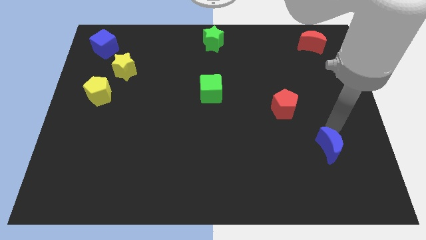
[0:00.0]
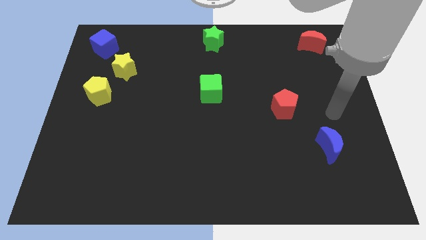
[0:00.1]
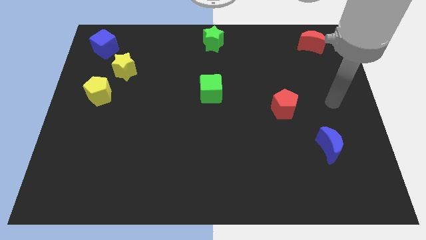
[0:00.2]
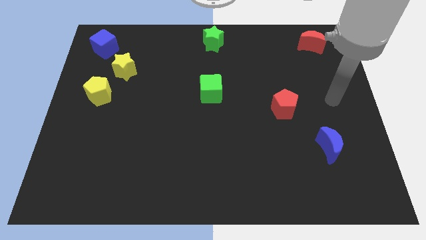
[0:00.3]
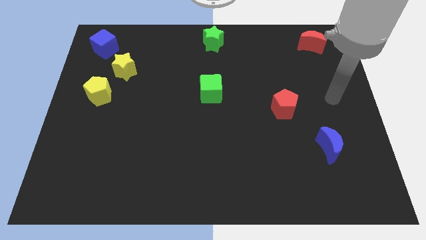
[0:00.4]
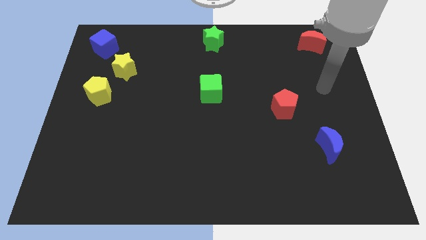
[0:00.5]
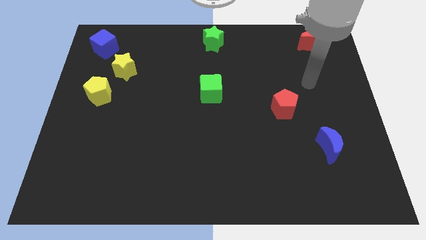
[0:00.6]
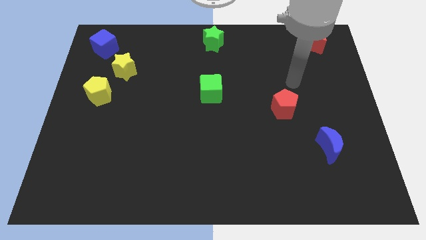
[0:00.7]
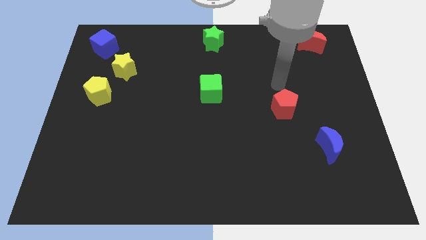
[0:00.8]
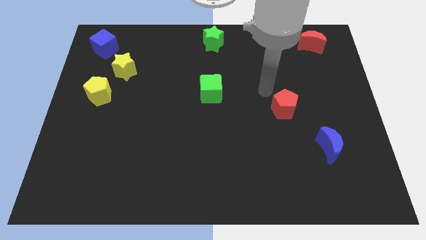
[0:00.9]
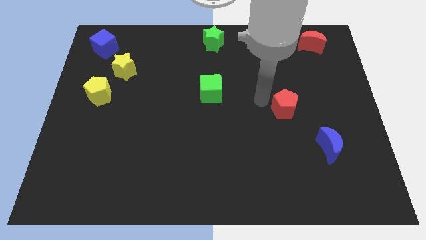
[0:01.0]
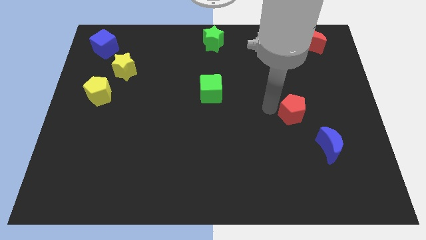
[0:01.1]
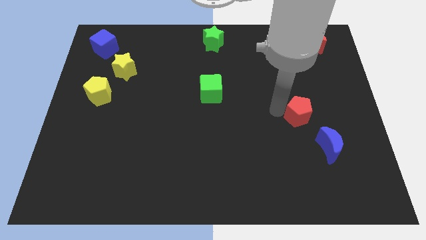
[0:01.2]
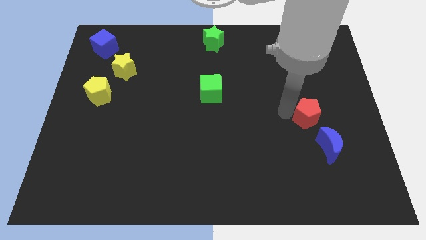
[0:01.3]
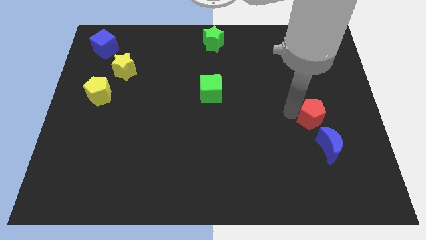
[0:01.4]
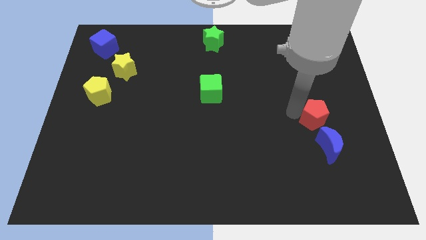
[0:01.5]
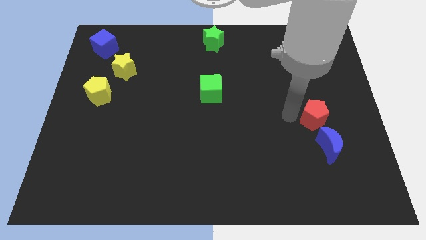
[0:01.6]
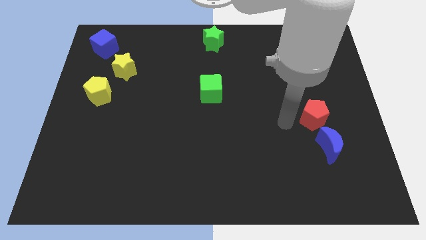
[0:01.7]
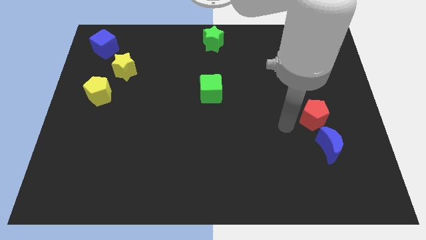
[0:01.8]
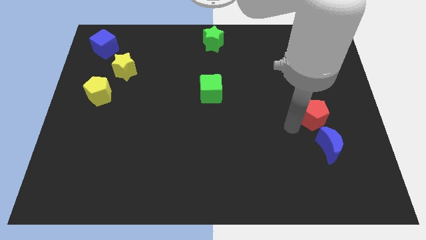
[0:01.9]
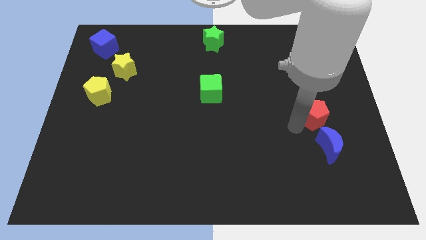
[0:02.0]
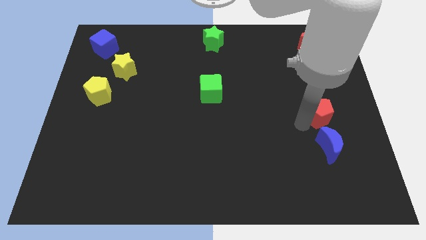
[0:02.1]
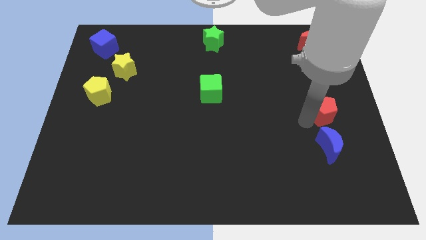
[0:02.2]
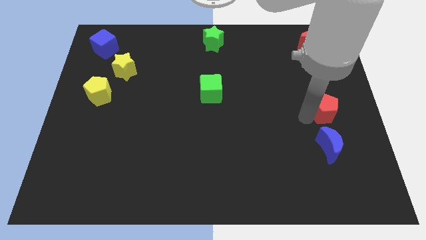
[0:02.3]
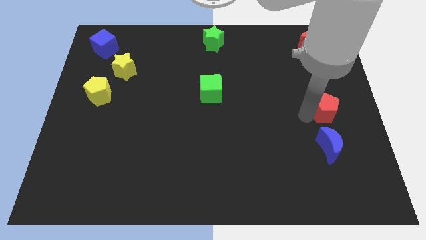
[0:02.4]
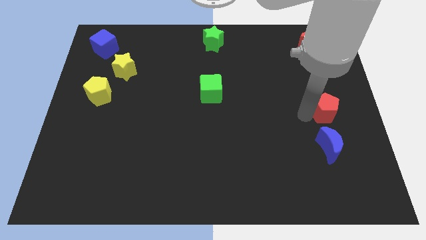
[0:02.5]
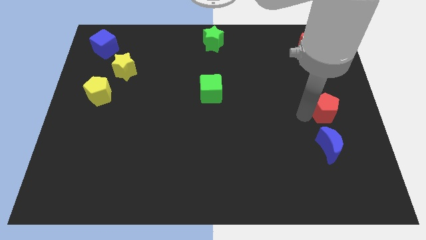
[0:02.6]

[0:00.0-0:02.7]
place red pentagon above blue moon

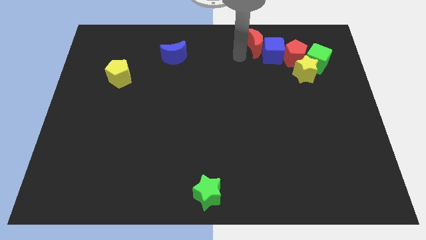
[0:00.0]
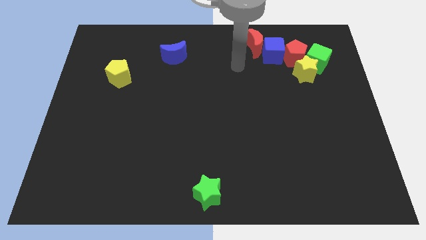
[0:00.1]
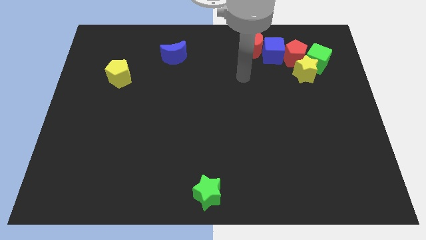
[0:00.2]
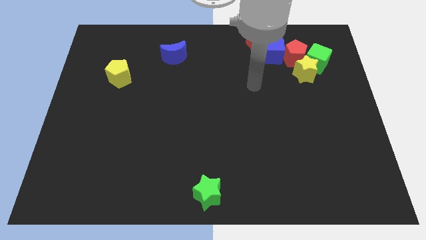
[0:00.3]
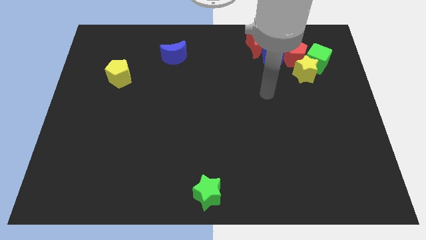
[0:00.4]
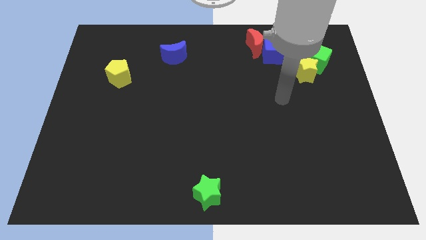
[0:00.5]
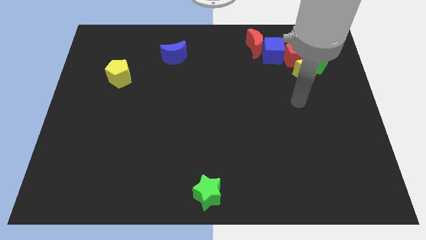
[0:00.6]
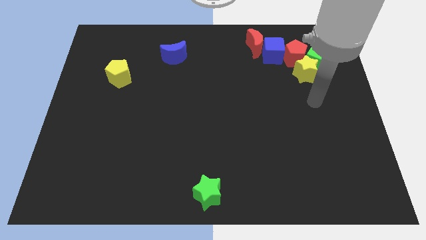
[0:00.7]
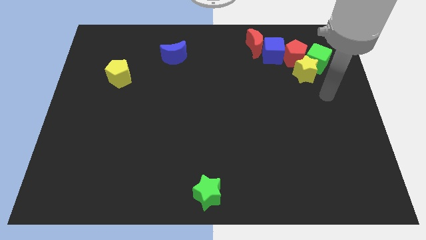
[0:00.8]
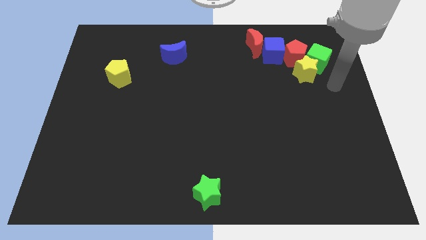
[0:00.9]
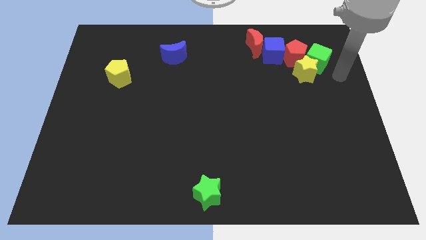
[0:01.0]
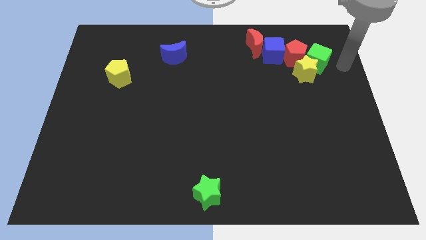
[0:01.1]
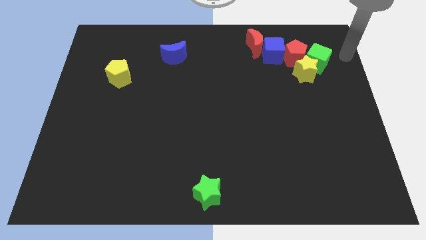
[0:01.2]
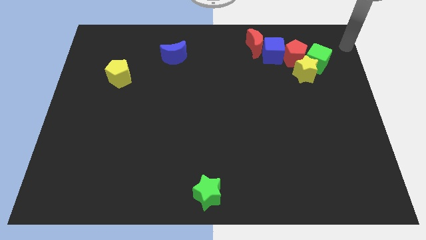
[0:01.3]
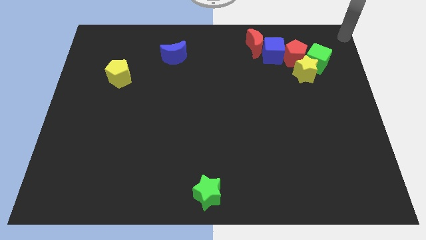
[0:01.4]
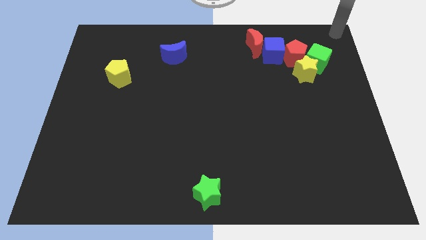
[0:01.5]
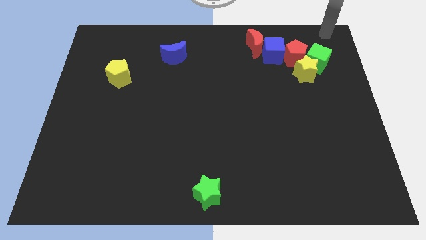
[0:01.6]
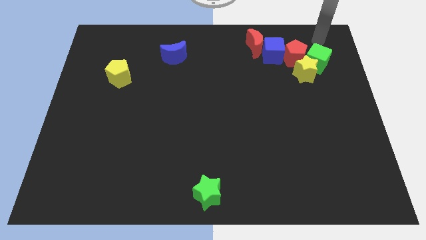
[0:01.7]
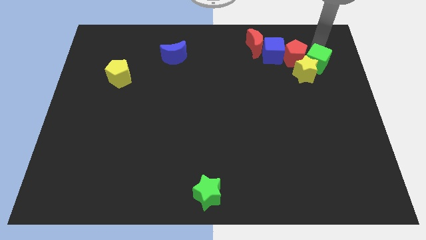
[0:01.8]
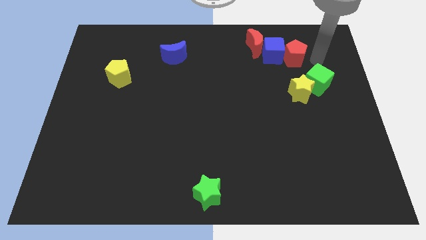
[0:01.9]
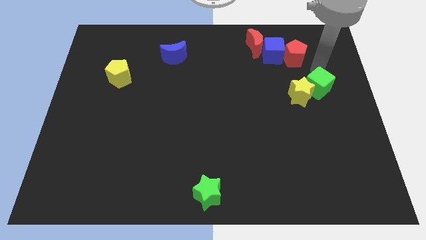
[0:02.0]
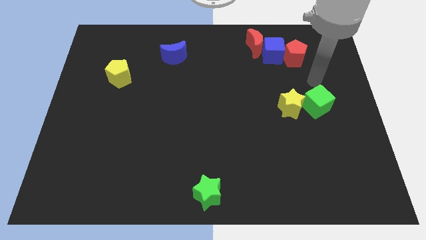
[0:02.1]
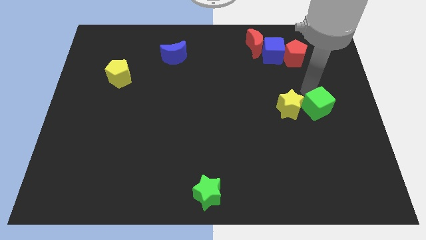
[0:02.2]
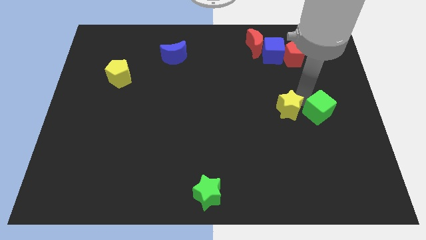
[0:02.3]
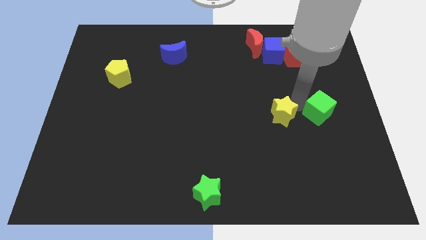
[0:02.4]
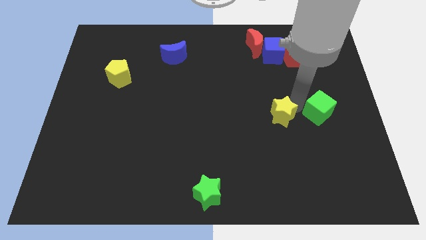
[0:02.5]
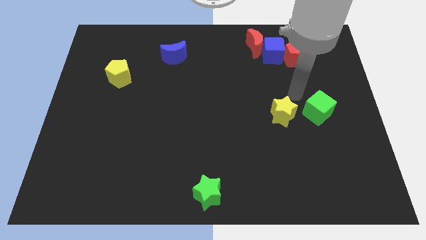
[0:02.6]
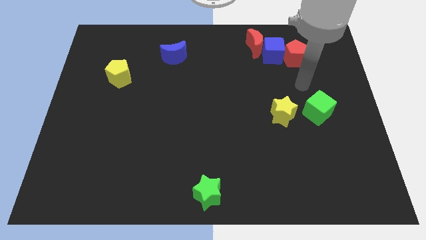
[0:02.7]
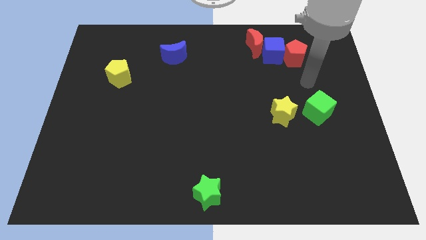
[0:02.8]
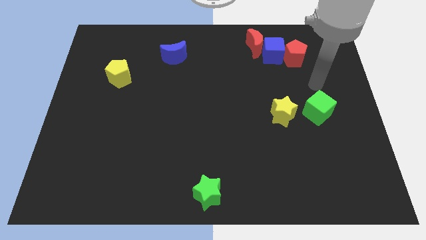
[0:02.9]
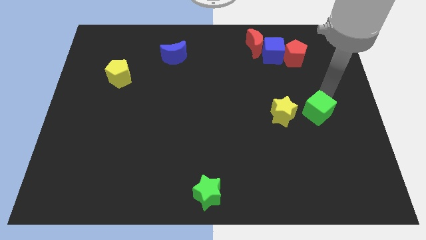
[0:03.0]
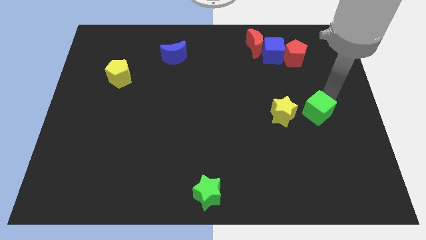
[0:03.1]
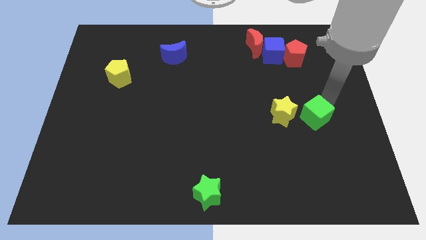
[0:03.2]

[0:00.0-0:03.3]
separate the yellow star and green cube together from the red pentagon

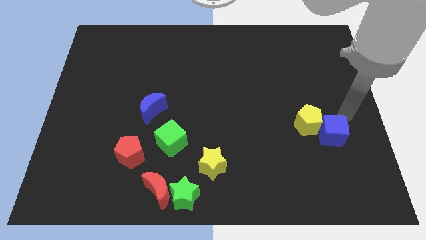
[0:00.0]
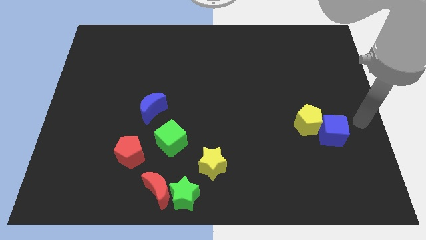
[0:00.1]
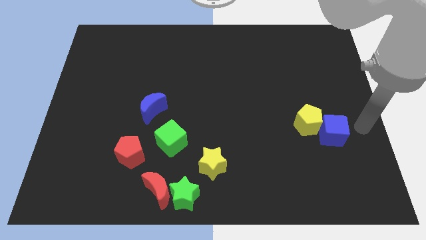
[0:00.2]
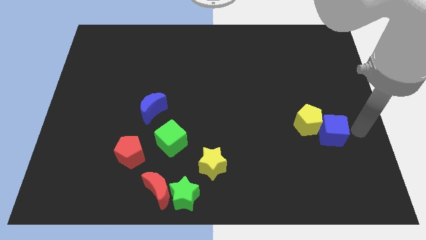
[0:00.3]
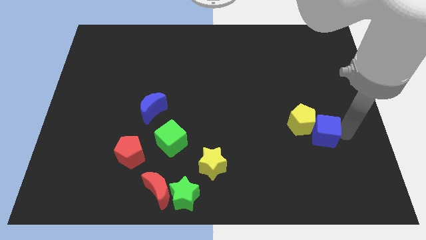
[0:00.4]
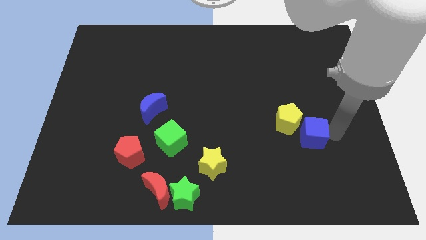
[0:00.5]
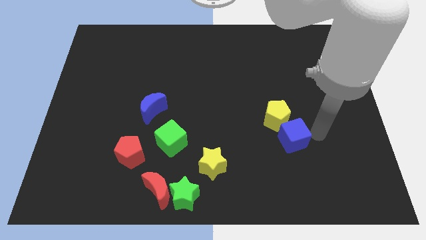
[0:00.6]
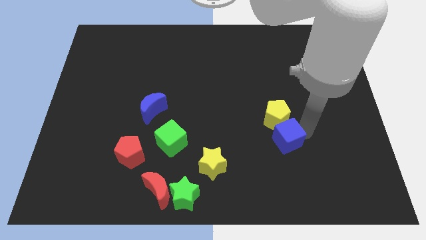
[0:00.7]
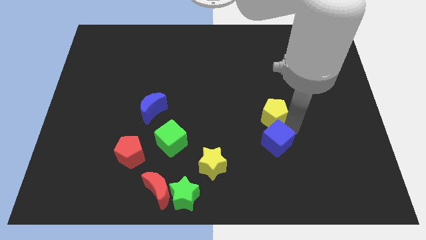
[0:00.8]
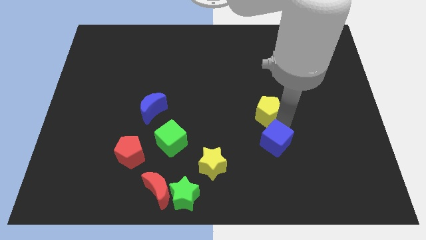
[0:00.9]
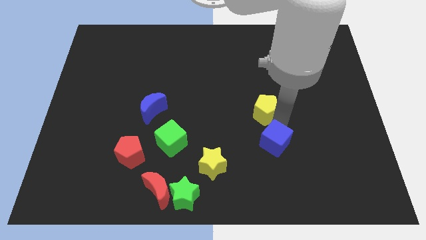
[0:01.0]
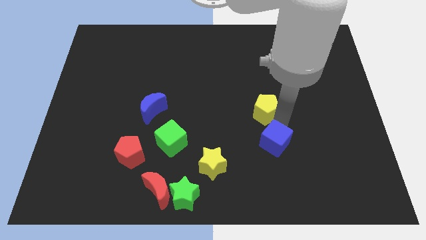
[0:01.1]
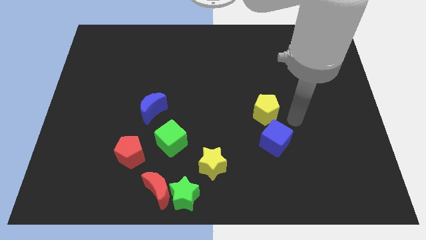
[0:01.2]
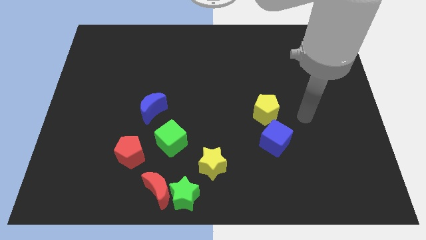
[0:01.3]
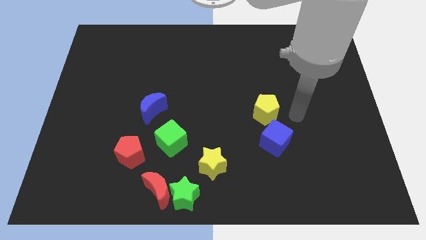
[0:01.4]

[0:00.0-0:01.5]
place yellow pentagon diagonal to the yellow star

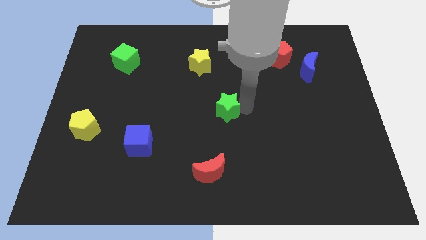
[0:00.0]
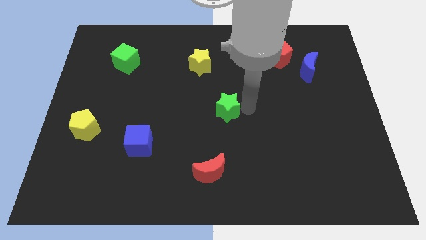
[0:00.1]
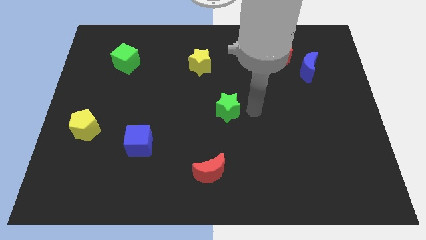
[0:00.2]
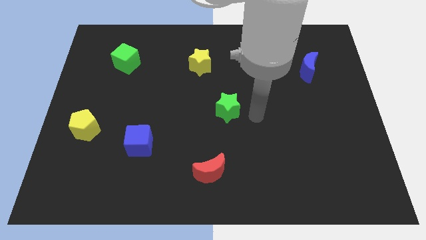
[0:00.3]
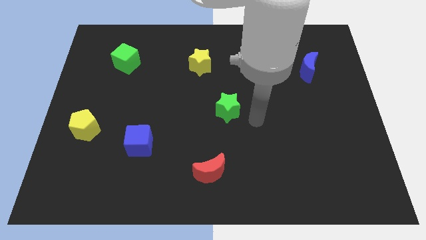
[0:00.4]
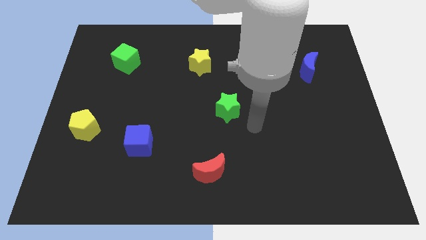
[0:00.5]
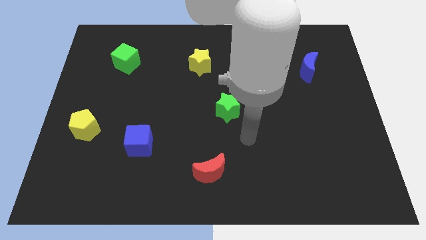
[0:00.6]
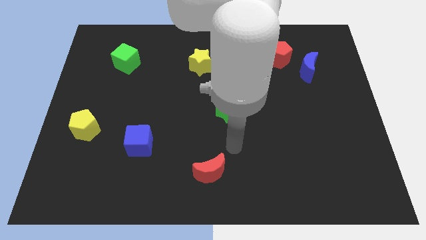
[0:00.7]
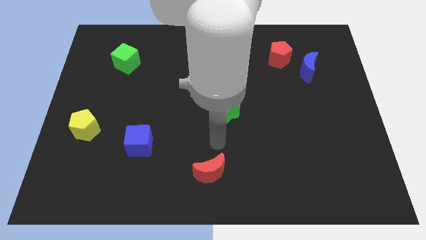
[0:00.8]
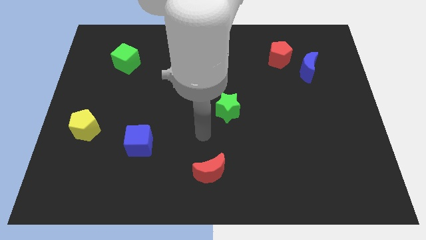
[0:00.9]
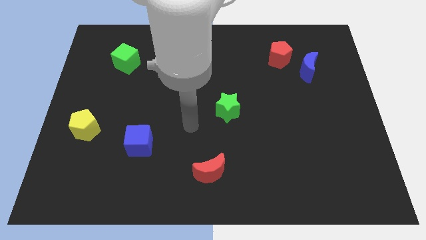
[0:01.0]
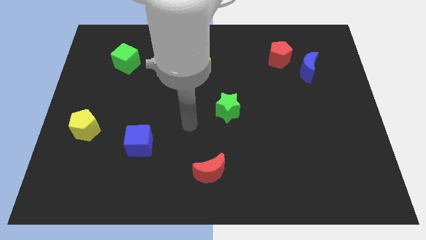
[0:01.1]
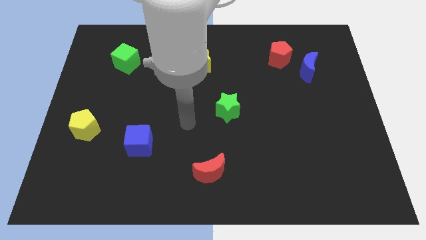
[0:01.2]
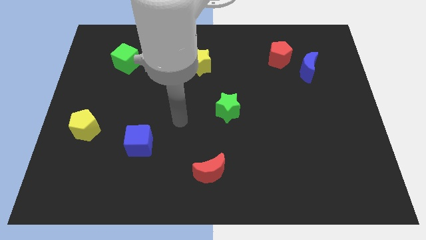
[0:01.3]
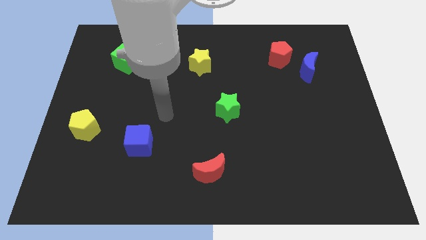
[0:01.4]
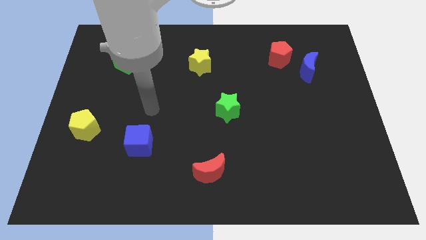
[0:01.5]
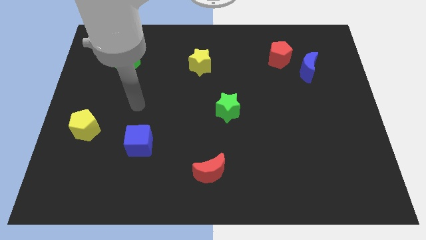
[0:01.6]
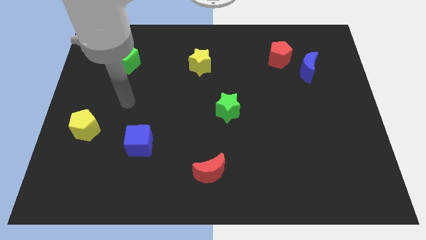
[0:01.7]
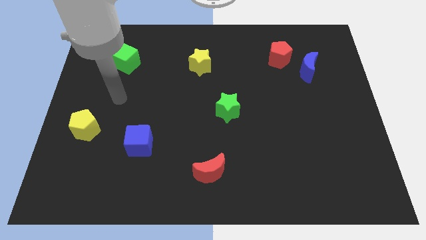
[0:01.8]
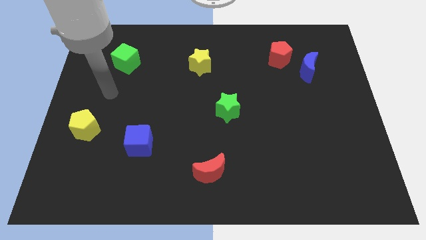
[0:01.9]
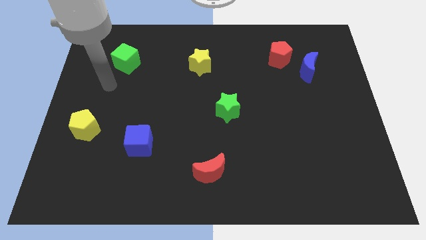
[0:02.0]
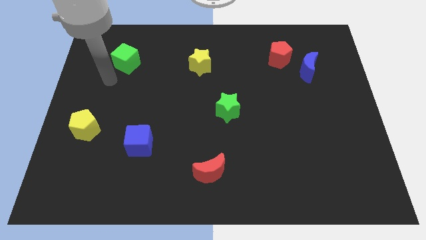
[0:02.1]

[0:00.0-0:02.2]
move your arm away from the green star
